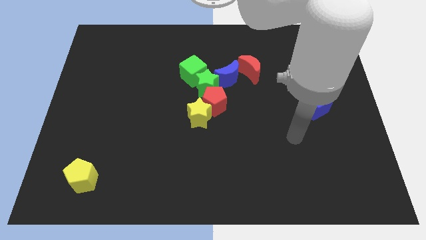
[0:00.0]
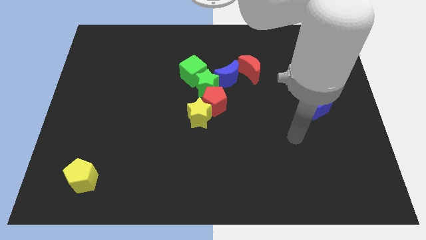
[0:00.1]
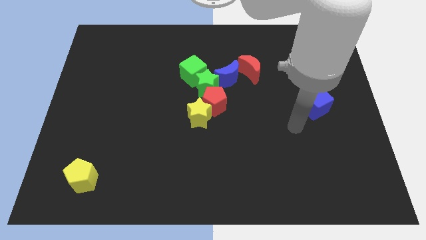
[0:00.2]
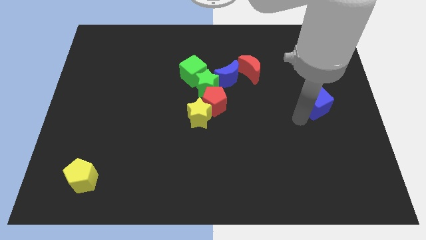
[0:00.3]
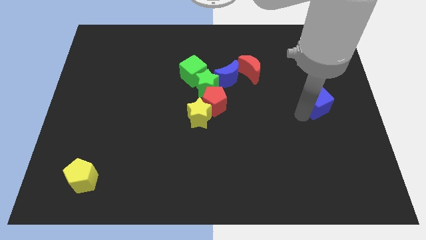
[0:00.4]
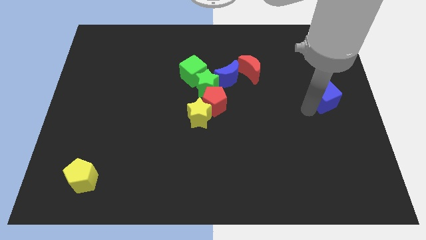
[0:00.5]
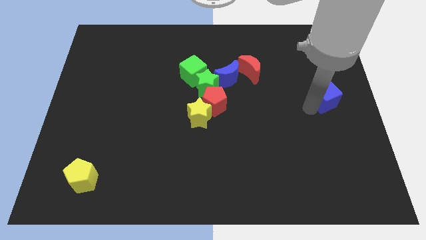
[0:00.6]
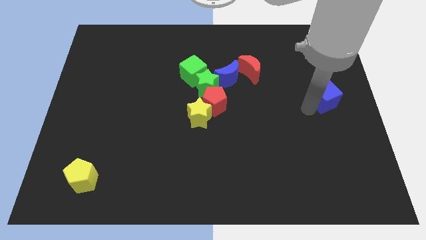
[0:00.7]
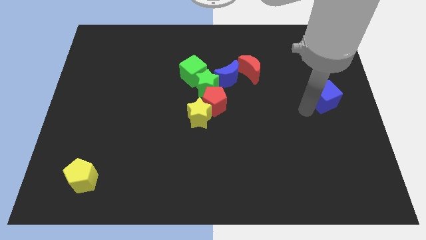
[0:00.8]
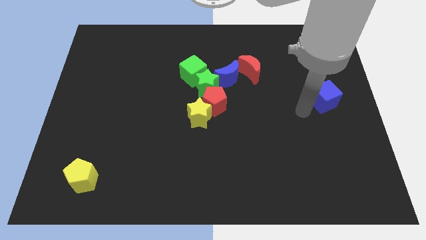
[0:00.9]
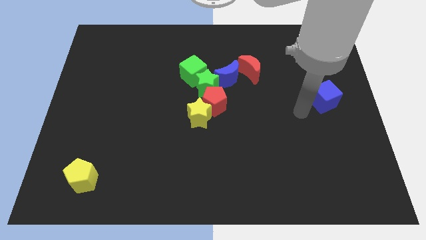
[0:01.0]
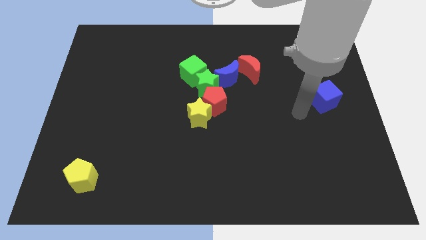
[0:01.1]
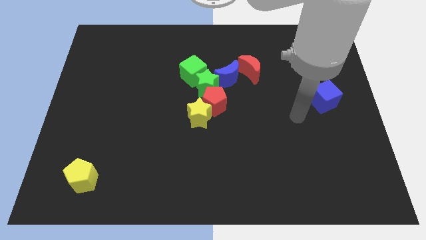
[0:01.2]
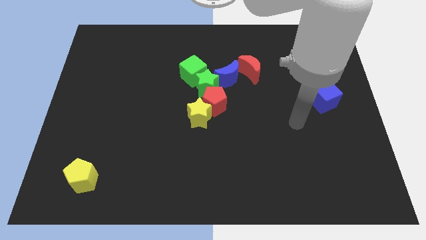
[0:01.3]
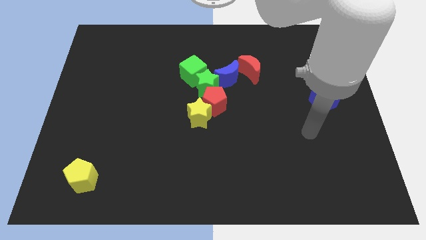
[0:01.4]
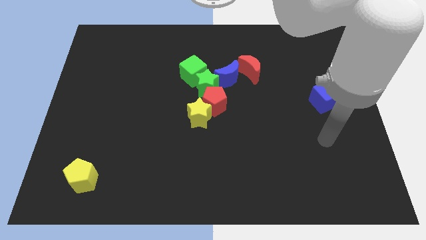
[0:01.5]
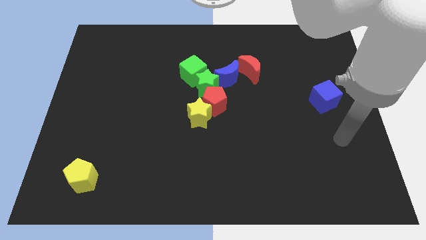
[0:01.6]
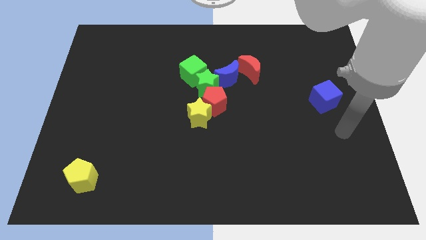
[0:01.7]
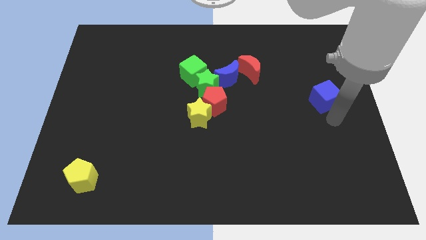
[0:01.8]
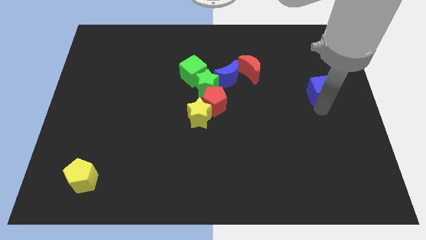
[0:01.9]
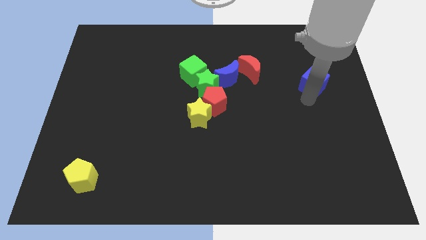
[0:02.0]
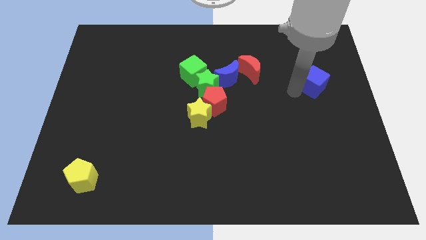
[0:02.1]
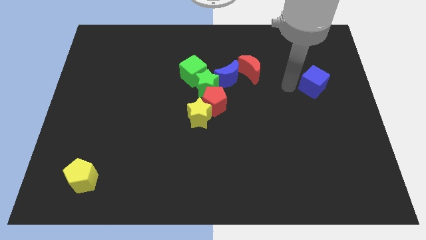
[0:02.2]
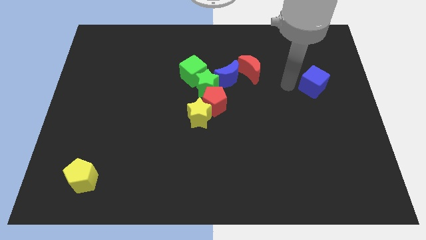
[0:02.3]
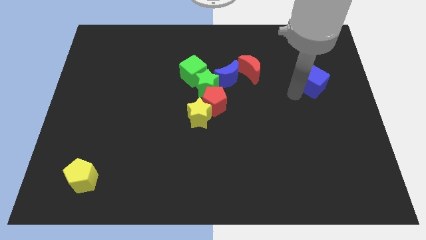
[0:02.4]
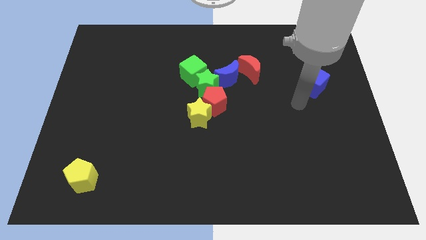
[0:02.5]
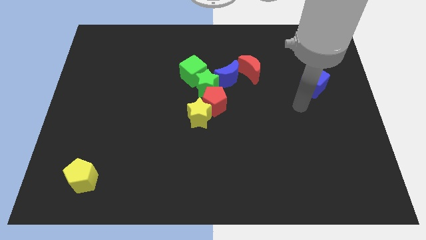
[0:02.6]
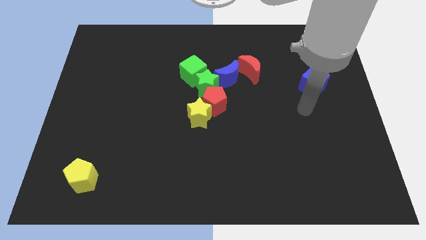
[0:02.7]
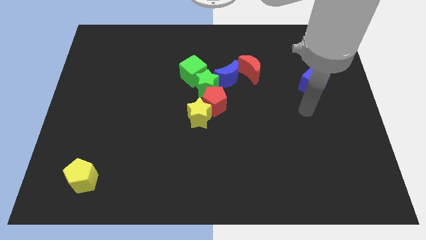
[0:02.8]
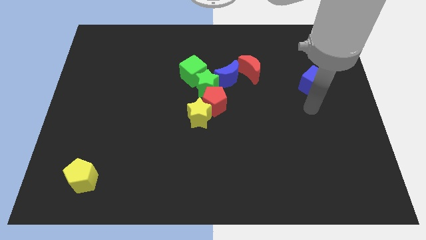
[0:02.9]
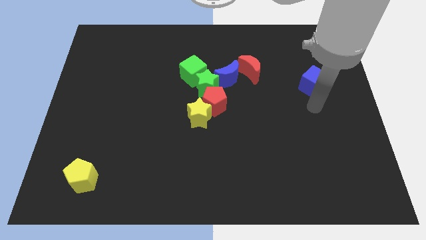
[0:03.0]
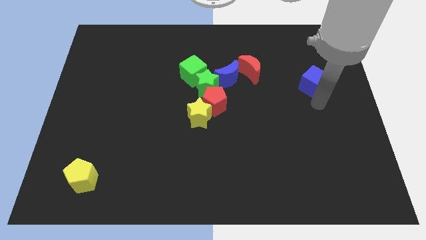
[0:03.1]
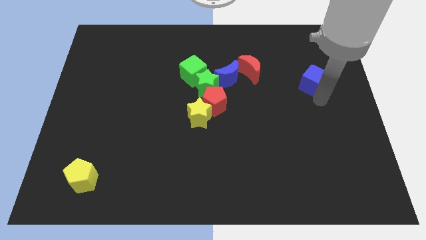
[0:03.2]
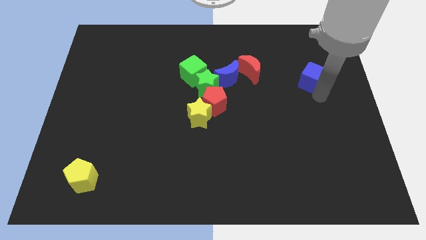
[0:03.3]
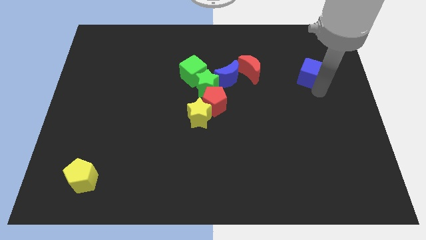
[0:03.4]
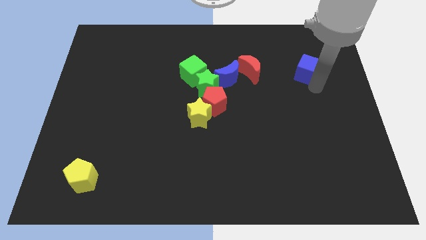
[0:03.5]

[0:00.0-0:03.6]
place the blue cube right to the red moon

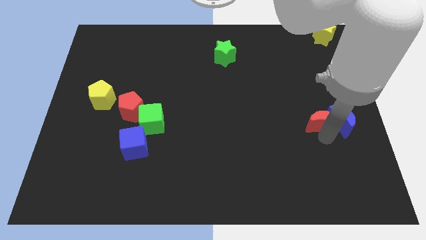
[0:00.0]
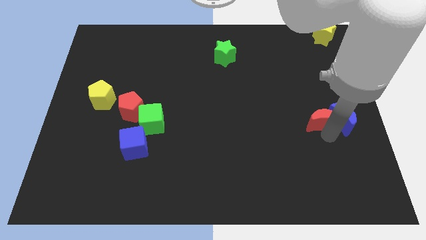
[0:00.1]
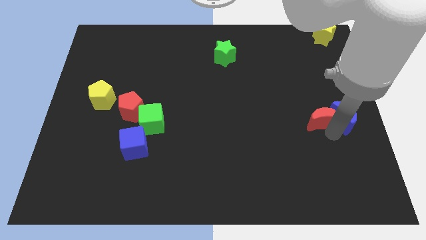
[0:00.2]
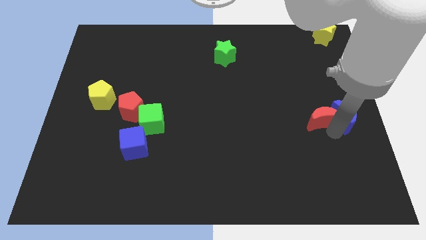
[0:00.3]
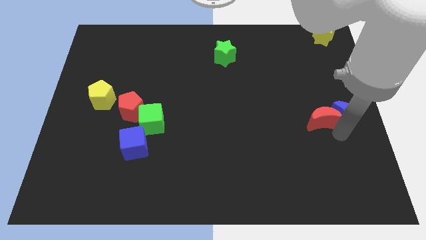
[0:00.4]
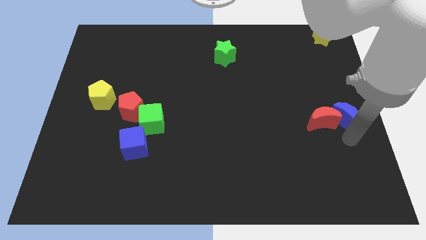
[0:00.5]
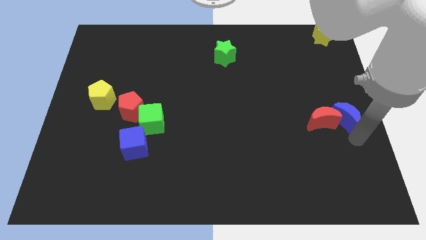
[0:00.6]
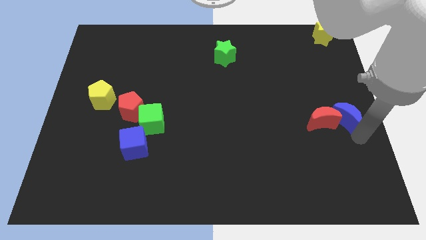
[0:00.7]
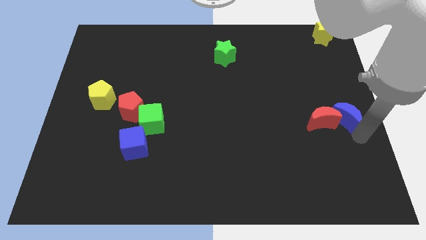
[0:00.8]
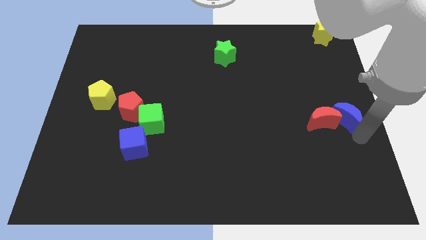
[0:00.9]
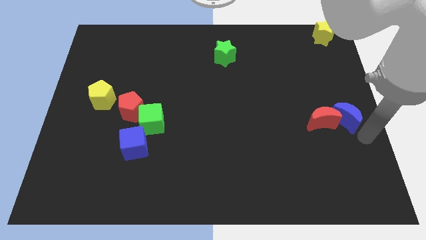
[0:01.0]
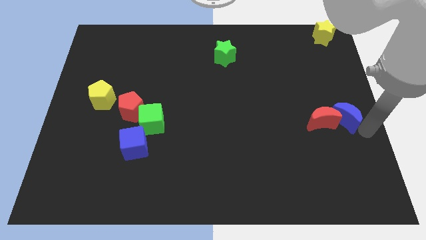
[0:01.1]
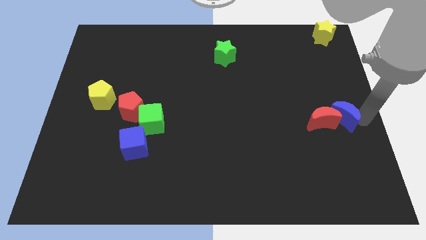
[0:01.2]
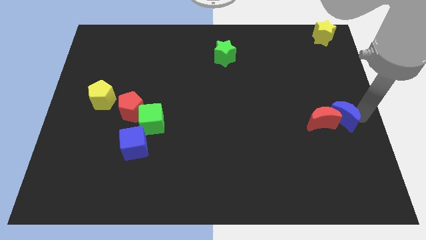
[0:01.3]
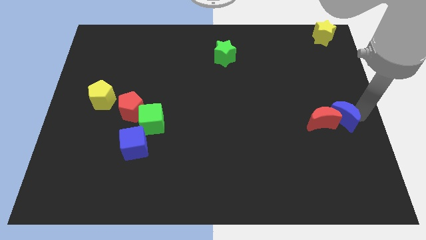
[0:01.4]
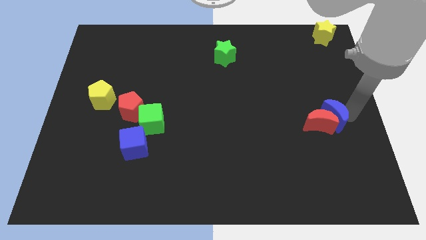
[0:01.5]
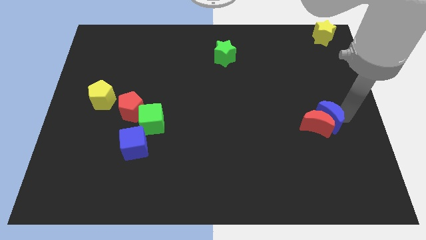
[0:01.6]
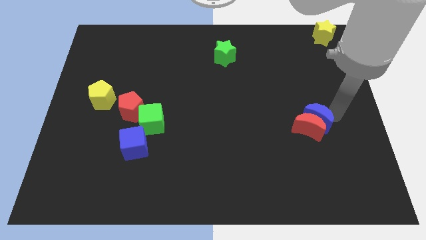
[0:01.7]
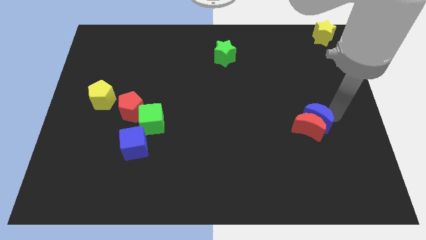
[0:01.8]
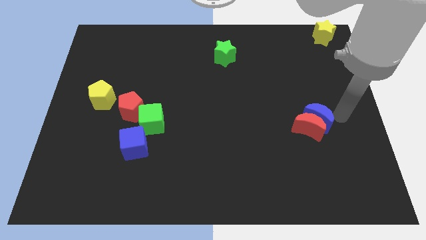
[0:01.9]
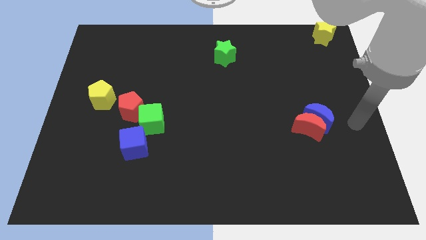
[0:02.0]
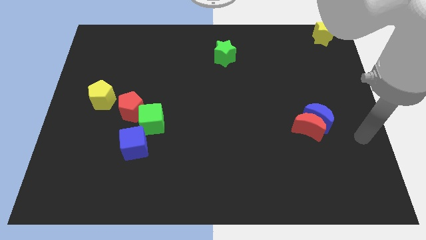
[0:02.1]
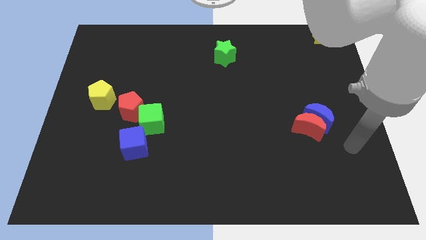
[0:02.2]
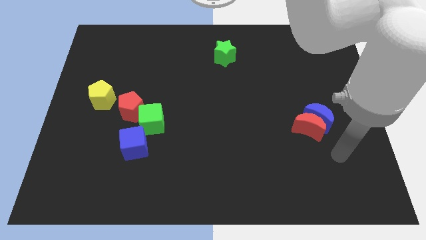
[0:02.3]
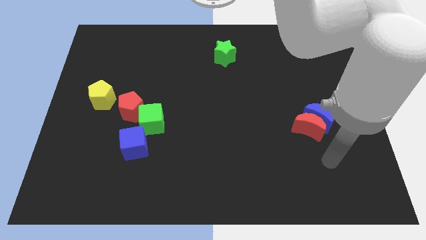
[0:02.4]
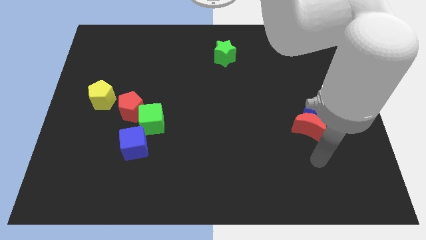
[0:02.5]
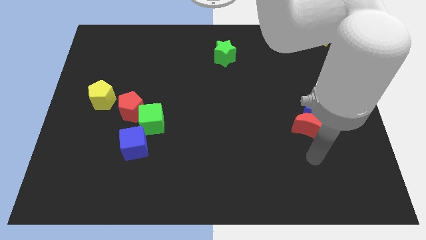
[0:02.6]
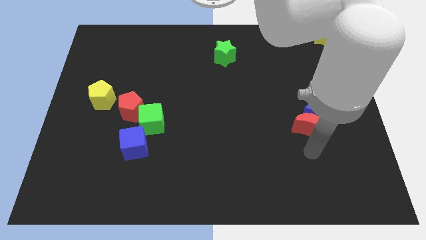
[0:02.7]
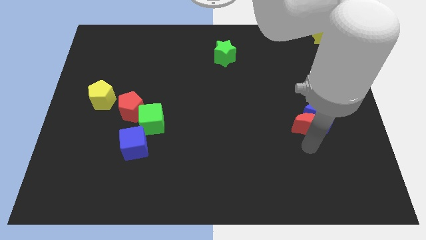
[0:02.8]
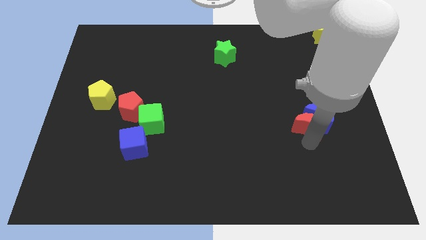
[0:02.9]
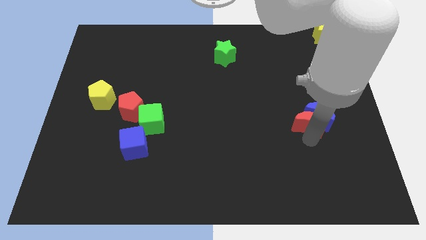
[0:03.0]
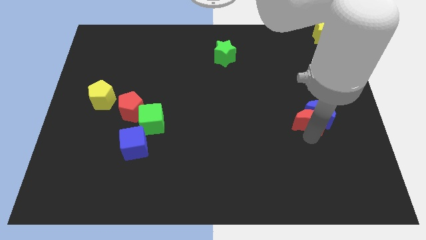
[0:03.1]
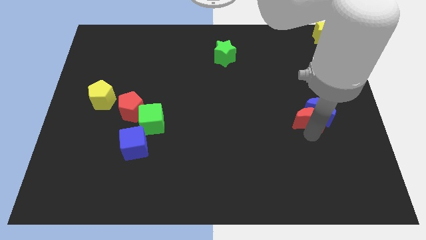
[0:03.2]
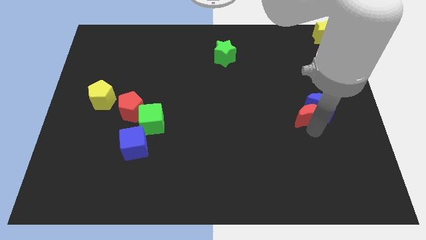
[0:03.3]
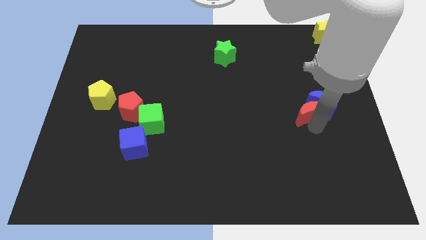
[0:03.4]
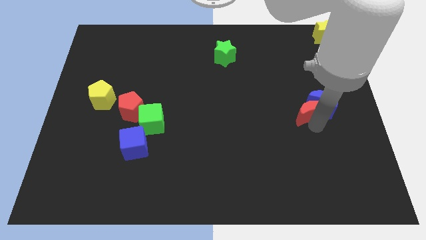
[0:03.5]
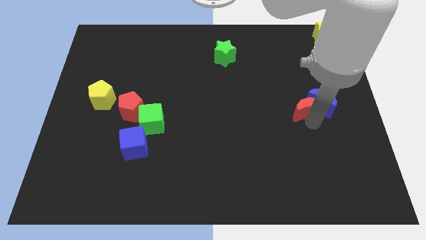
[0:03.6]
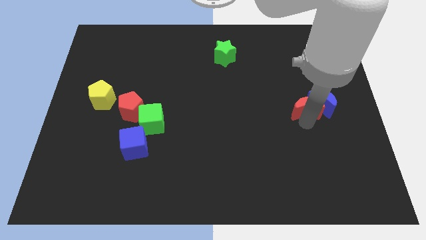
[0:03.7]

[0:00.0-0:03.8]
slide the red moon and blue moon upwards

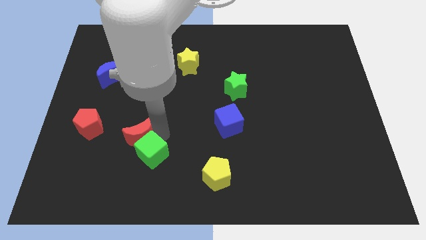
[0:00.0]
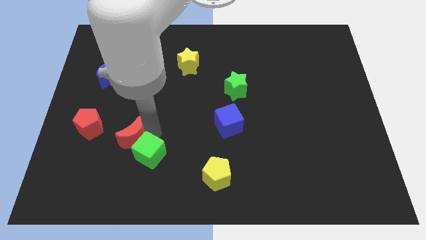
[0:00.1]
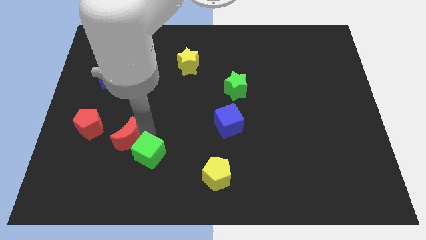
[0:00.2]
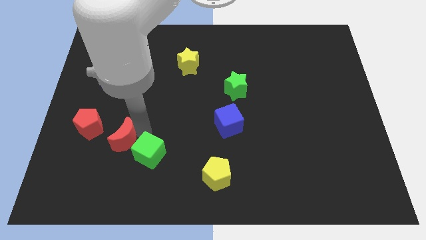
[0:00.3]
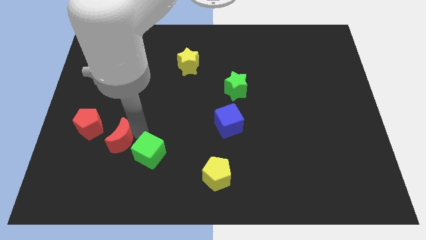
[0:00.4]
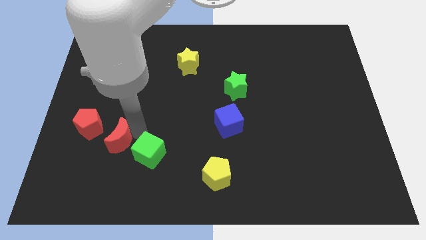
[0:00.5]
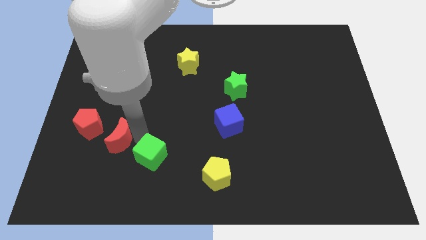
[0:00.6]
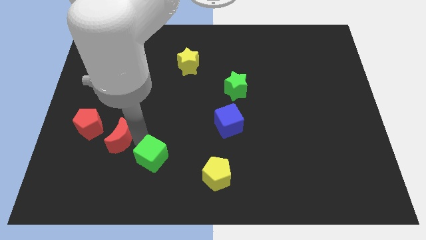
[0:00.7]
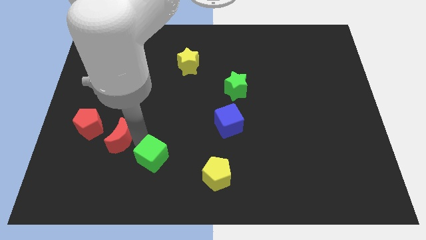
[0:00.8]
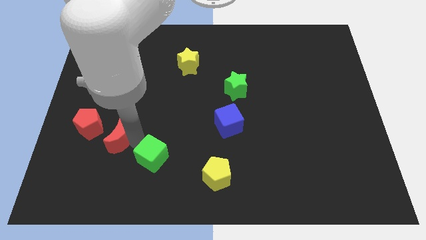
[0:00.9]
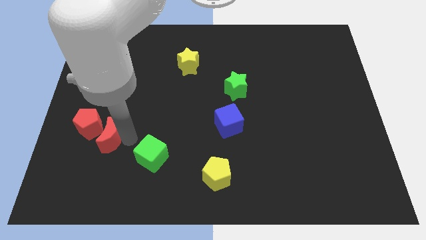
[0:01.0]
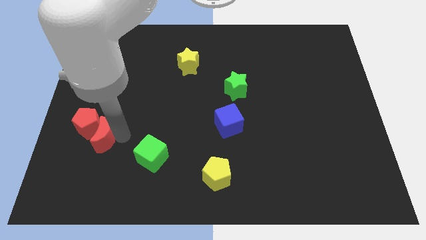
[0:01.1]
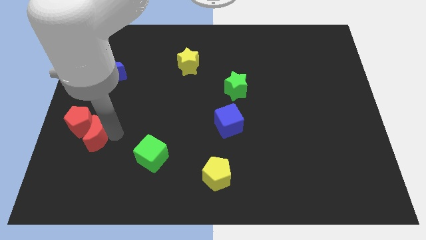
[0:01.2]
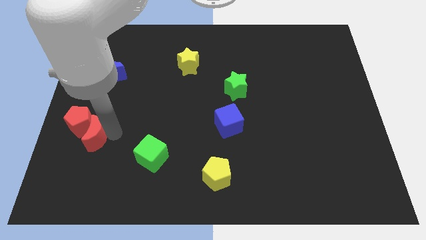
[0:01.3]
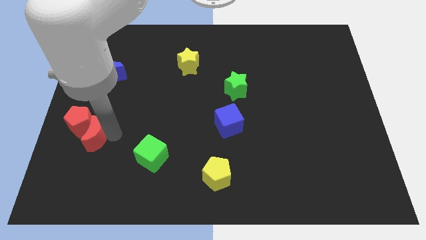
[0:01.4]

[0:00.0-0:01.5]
push the red crescent into the red pentagon

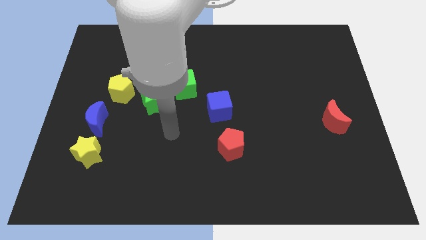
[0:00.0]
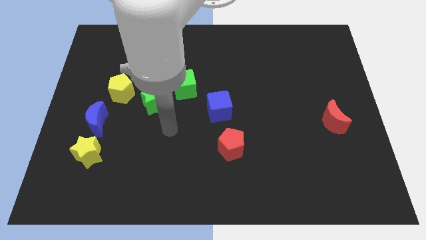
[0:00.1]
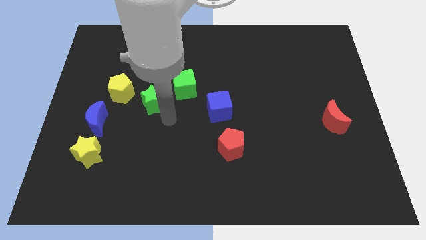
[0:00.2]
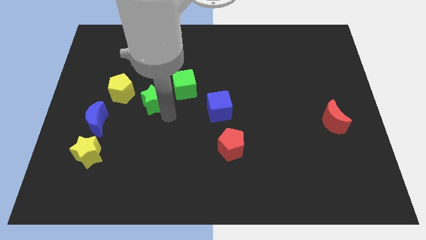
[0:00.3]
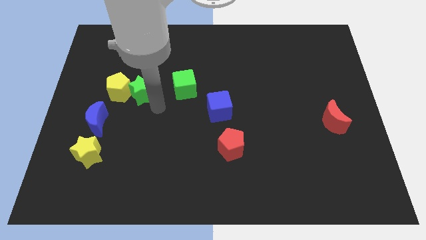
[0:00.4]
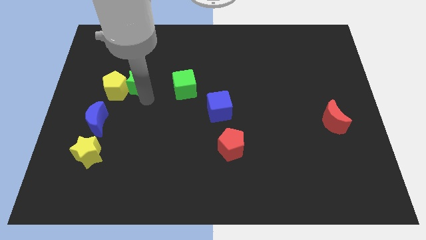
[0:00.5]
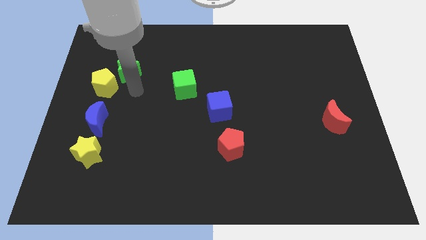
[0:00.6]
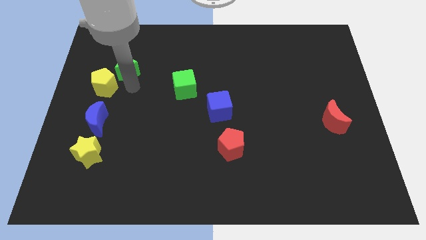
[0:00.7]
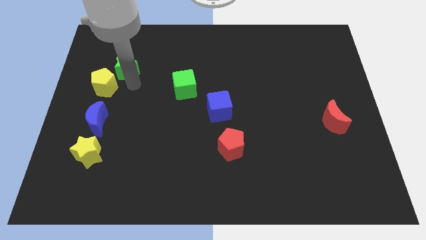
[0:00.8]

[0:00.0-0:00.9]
place green star on top right of the yellow pentagon
